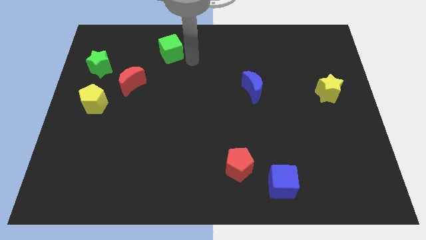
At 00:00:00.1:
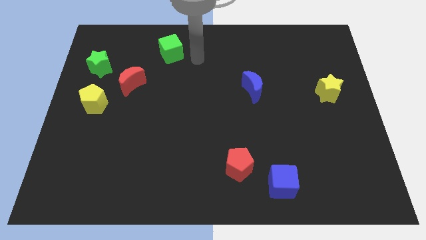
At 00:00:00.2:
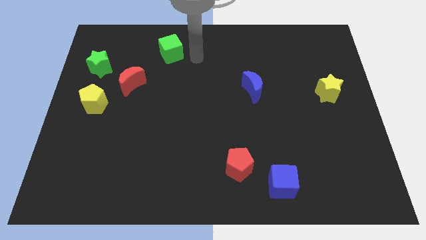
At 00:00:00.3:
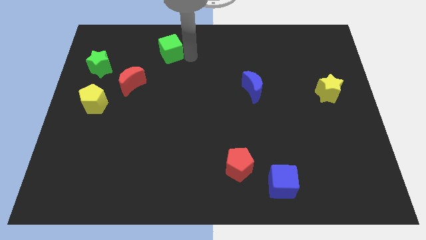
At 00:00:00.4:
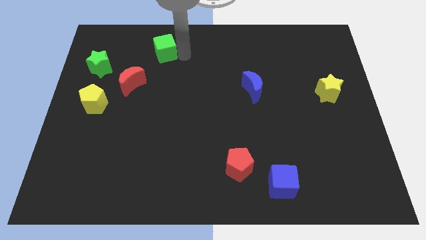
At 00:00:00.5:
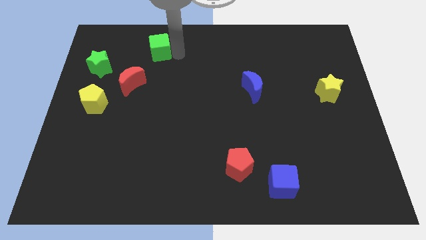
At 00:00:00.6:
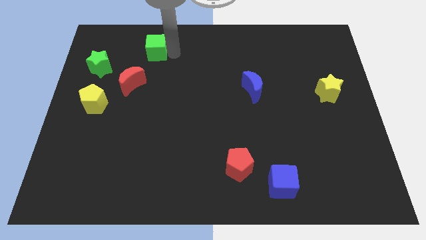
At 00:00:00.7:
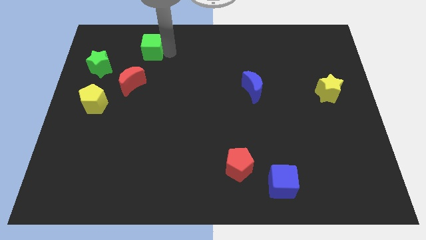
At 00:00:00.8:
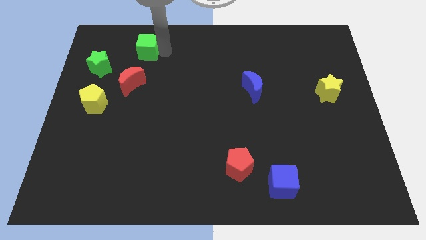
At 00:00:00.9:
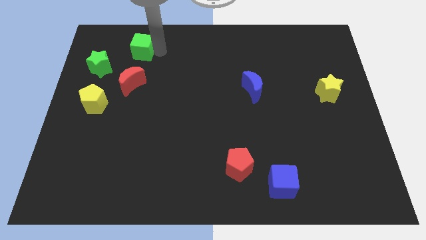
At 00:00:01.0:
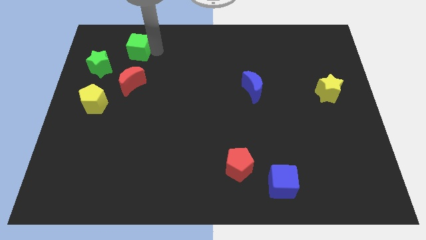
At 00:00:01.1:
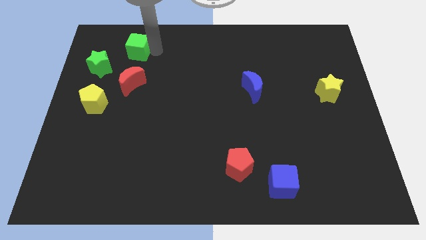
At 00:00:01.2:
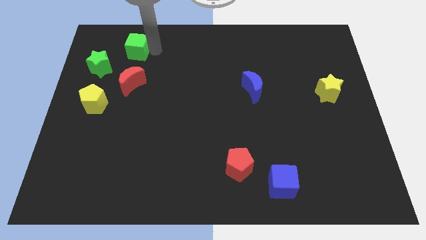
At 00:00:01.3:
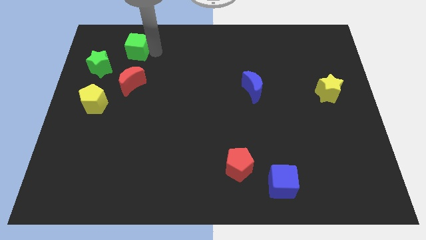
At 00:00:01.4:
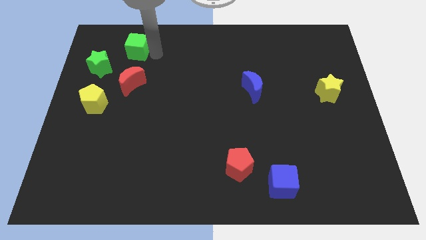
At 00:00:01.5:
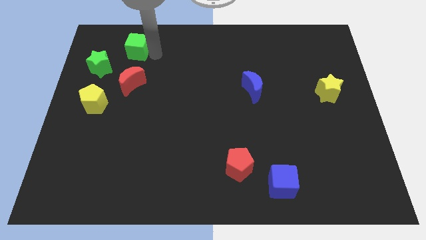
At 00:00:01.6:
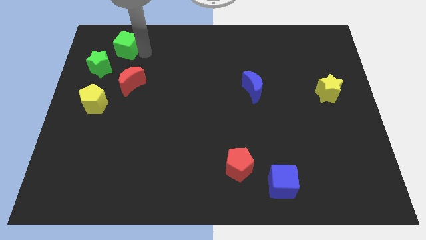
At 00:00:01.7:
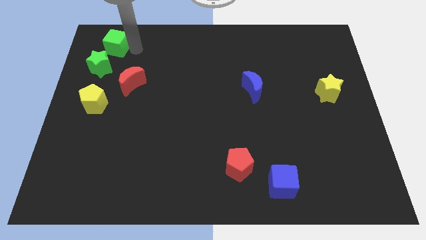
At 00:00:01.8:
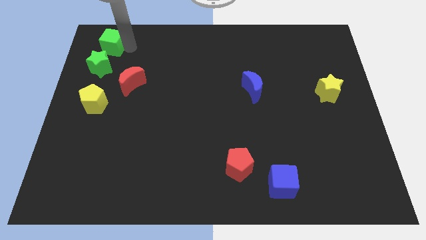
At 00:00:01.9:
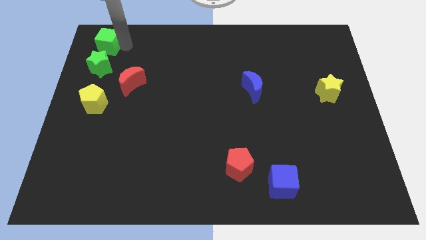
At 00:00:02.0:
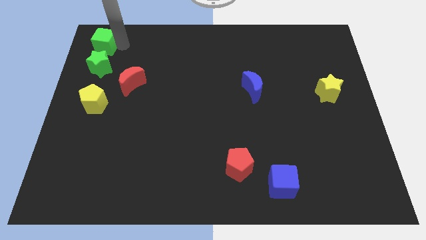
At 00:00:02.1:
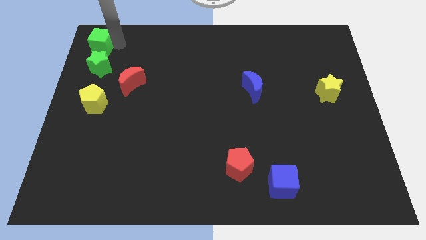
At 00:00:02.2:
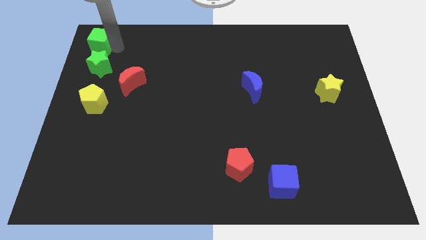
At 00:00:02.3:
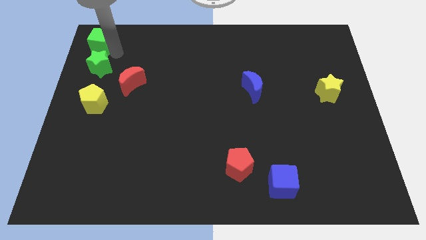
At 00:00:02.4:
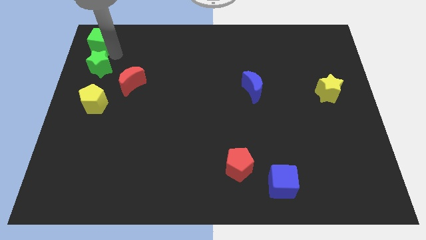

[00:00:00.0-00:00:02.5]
place the green cube above the green star

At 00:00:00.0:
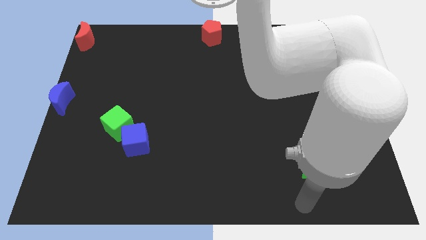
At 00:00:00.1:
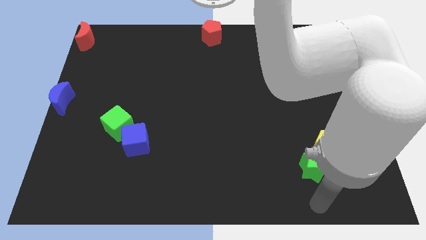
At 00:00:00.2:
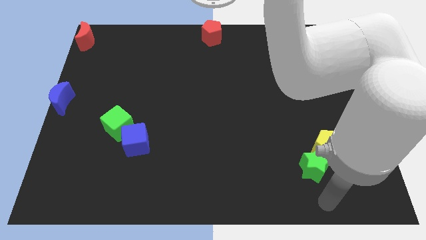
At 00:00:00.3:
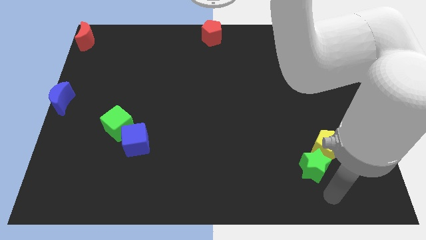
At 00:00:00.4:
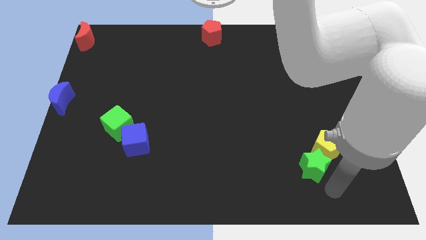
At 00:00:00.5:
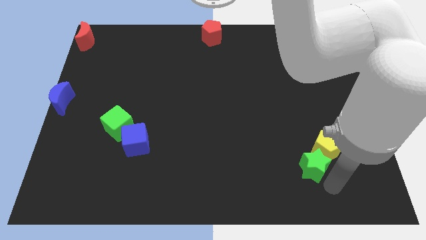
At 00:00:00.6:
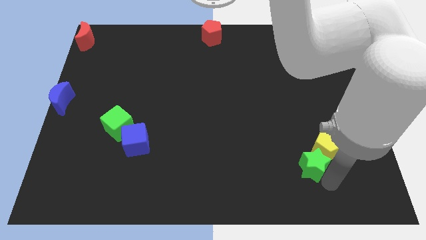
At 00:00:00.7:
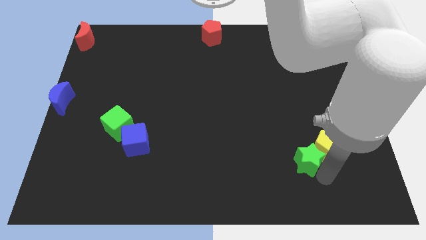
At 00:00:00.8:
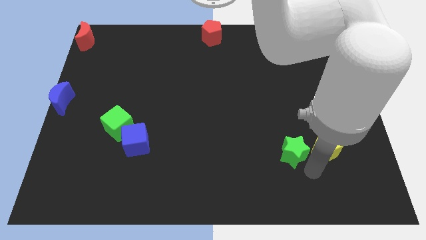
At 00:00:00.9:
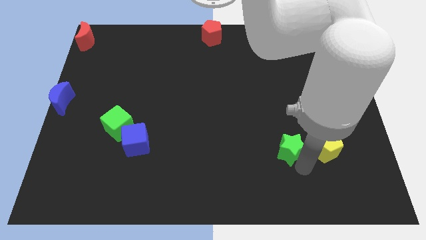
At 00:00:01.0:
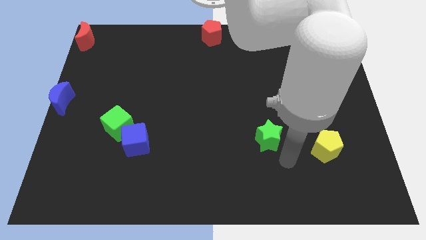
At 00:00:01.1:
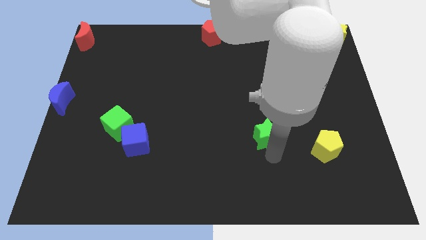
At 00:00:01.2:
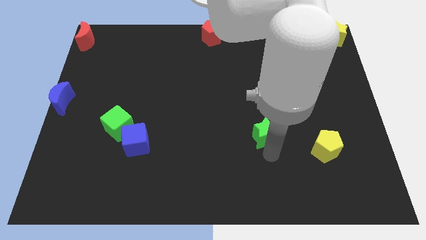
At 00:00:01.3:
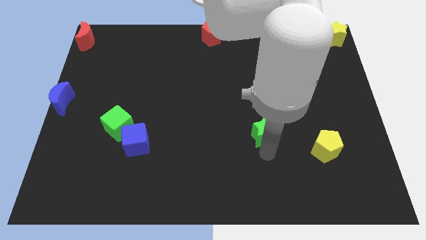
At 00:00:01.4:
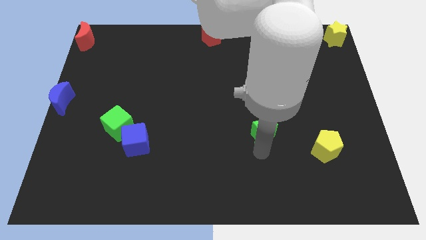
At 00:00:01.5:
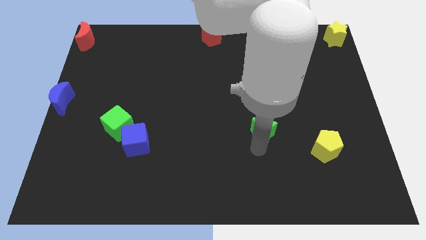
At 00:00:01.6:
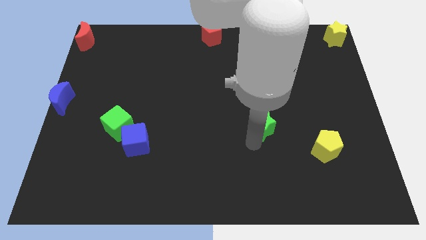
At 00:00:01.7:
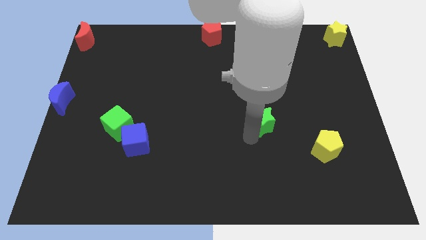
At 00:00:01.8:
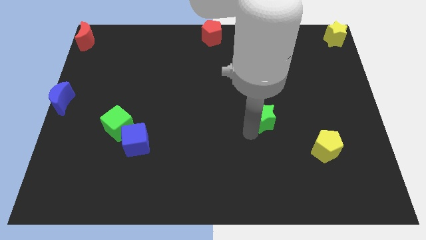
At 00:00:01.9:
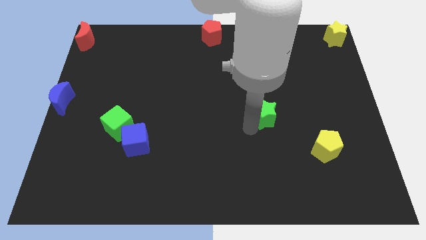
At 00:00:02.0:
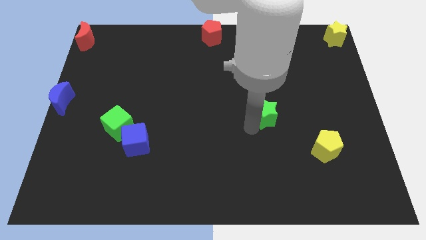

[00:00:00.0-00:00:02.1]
separate green star from yellow pentagon

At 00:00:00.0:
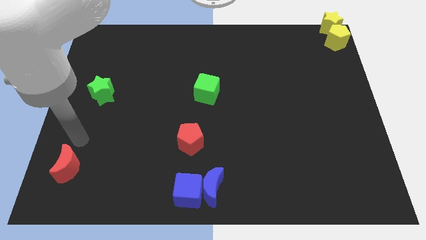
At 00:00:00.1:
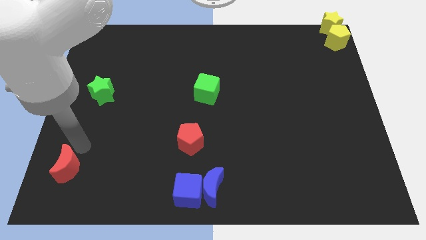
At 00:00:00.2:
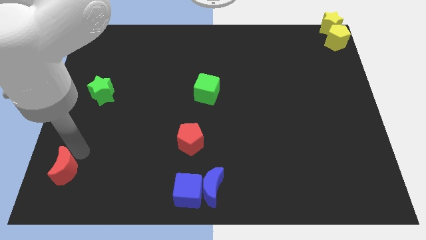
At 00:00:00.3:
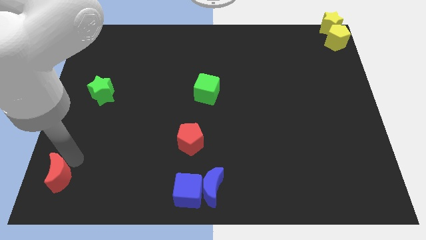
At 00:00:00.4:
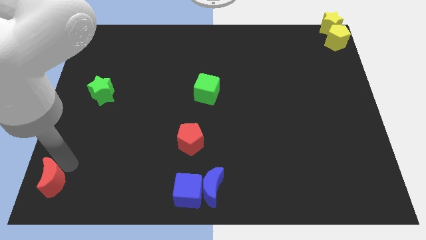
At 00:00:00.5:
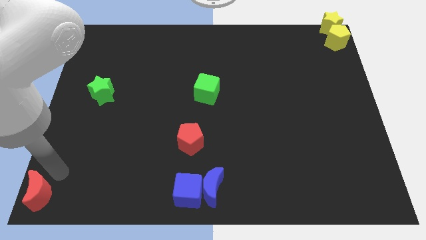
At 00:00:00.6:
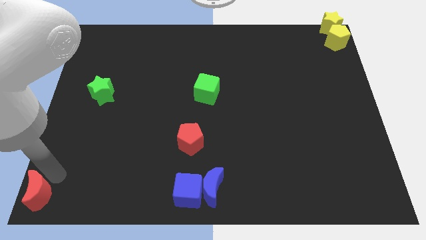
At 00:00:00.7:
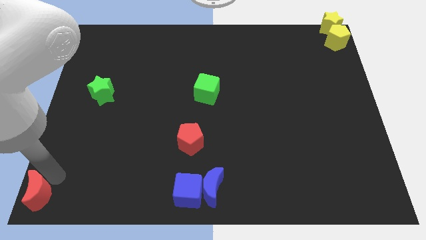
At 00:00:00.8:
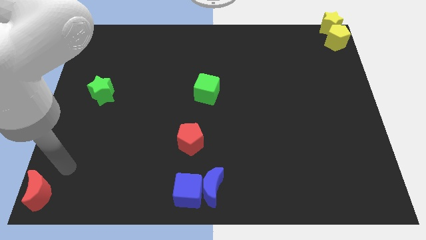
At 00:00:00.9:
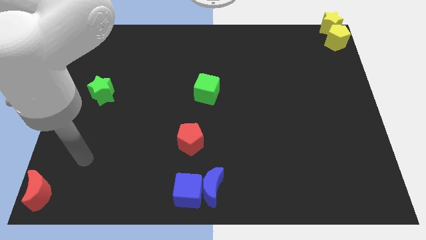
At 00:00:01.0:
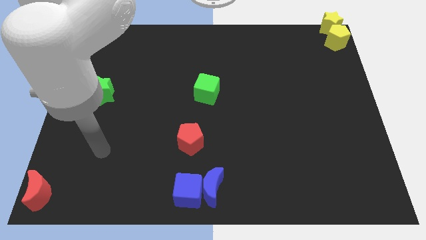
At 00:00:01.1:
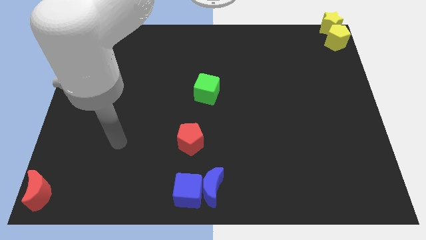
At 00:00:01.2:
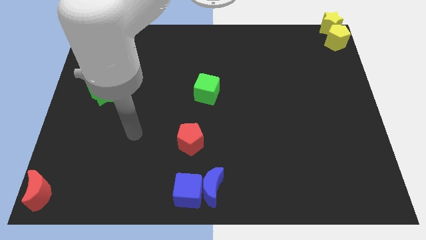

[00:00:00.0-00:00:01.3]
place the red crescent to the bottom left corner

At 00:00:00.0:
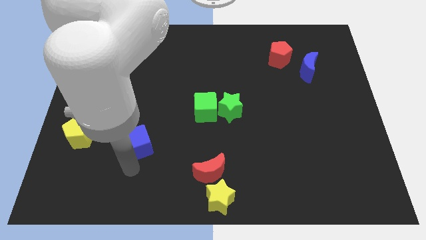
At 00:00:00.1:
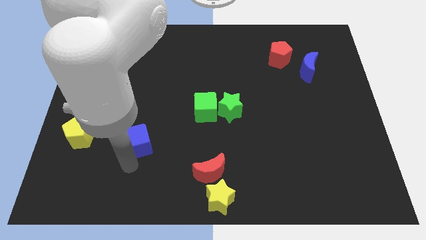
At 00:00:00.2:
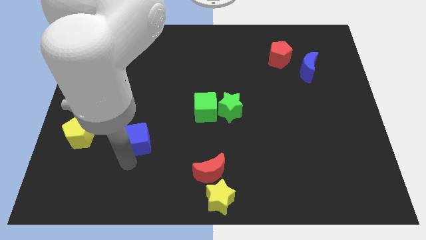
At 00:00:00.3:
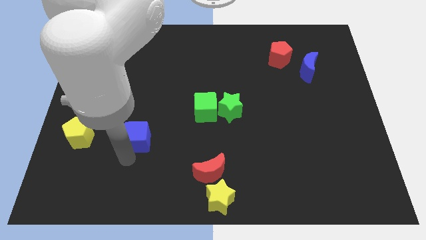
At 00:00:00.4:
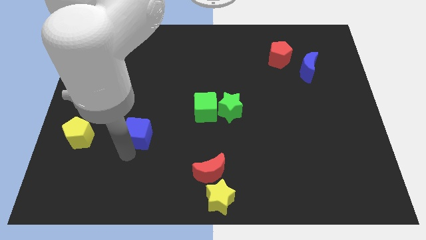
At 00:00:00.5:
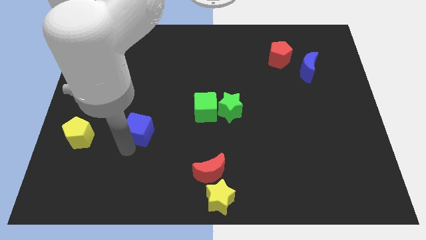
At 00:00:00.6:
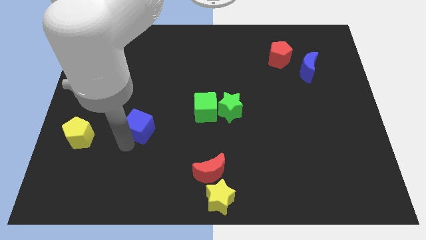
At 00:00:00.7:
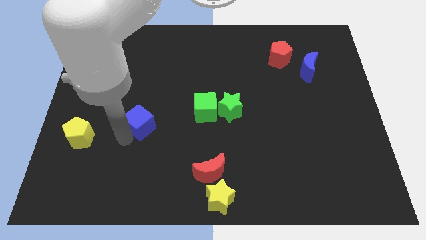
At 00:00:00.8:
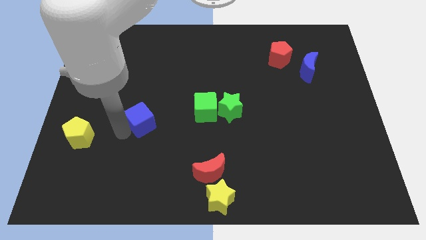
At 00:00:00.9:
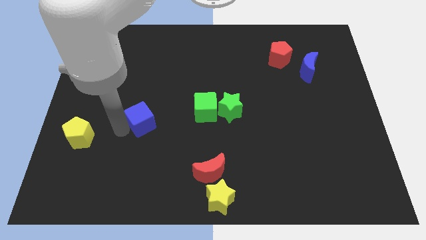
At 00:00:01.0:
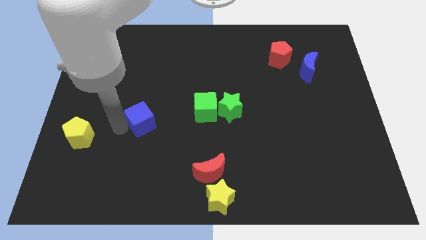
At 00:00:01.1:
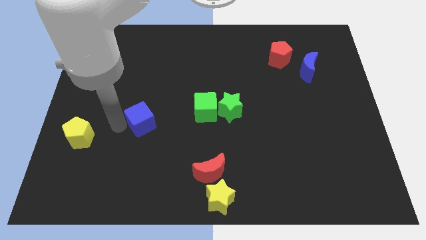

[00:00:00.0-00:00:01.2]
drag the blue cube slightly upwards

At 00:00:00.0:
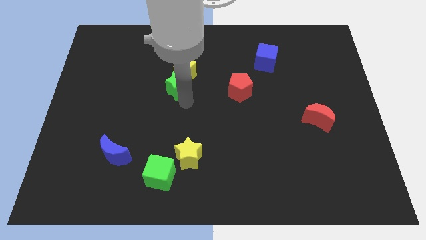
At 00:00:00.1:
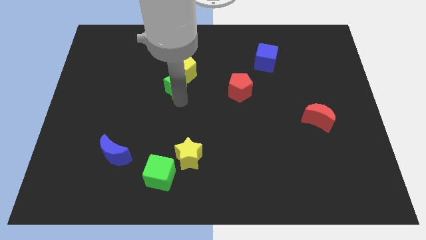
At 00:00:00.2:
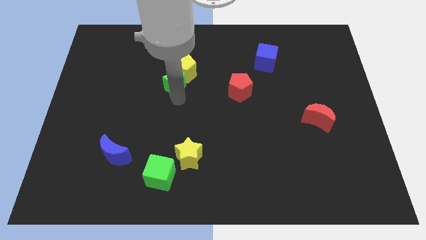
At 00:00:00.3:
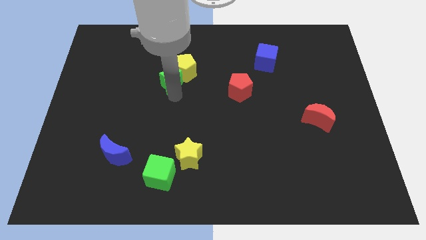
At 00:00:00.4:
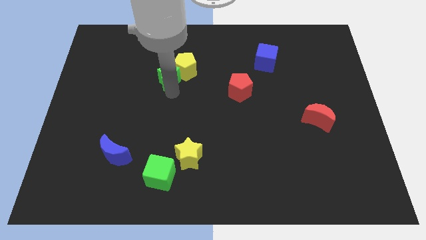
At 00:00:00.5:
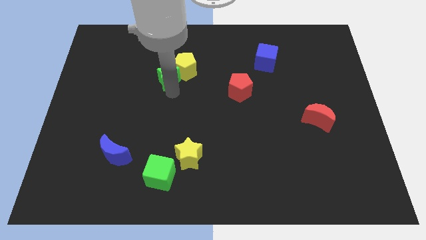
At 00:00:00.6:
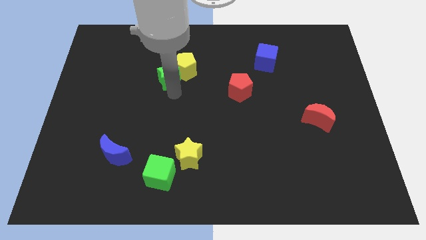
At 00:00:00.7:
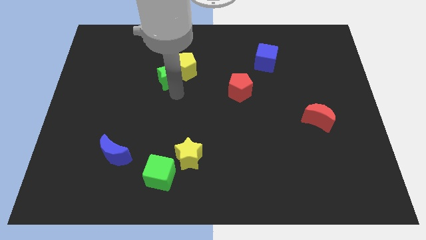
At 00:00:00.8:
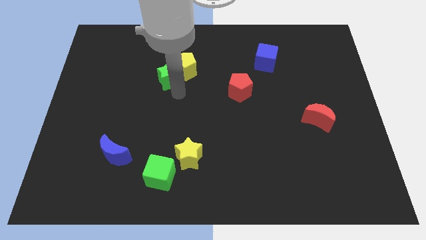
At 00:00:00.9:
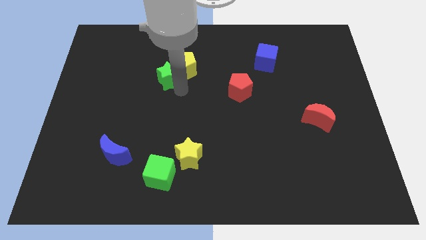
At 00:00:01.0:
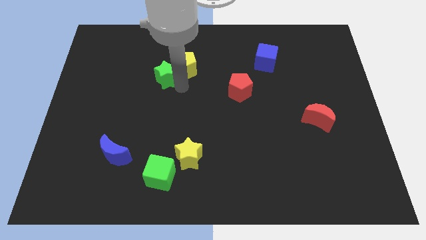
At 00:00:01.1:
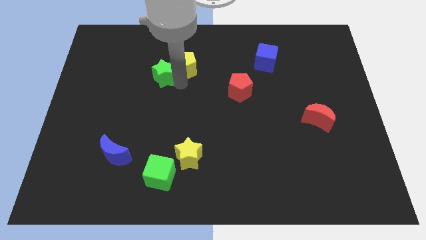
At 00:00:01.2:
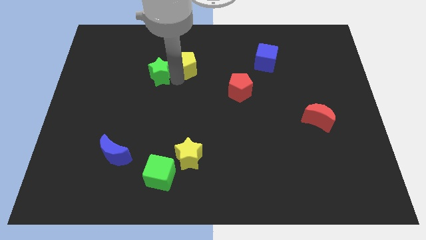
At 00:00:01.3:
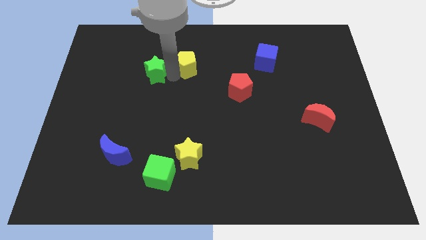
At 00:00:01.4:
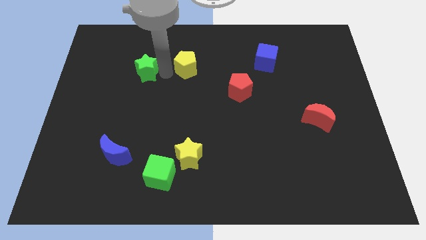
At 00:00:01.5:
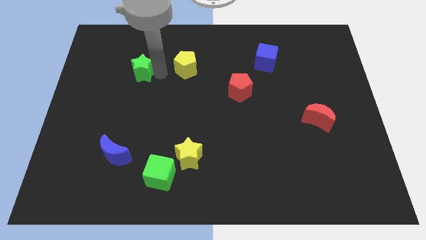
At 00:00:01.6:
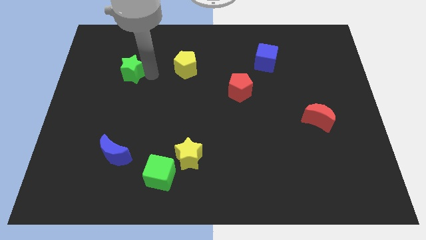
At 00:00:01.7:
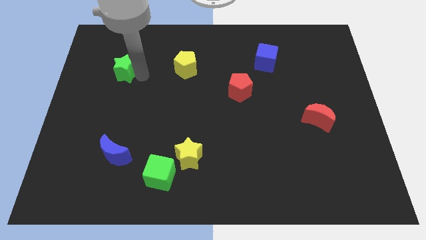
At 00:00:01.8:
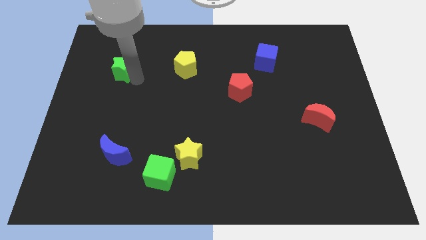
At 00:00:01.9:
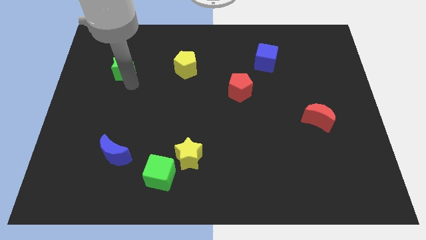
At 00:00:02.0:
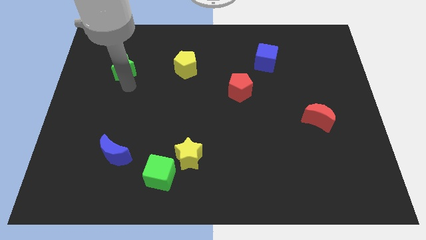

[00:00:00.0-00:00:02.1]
separate the green star from the yellow pentagon
